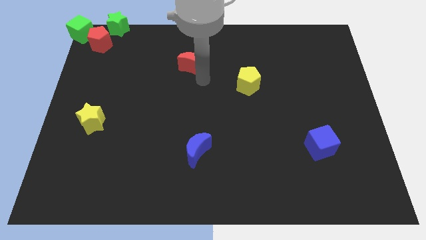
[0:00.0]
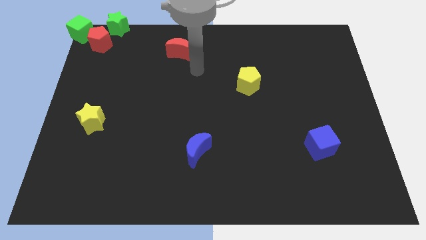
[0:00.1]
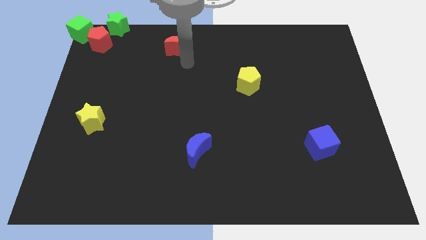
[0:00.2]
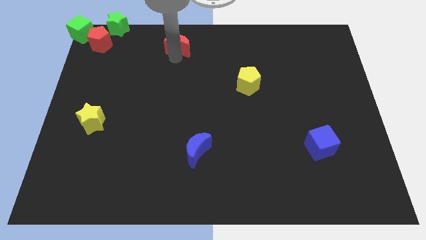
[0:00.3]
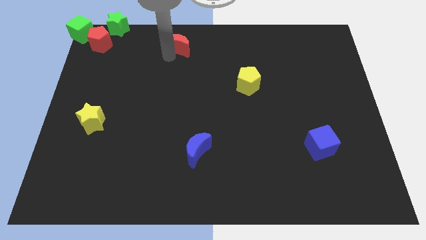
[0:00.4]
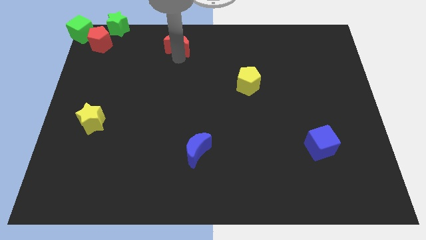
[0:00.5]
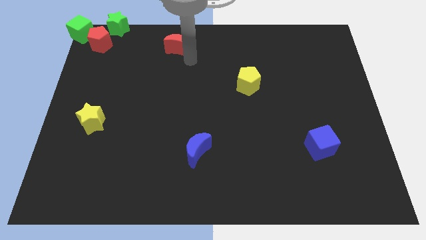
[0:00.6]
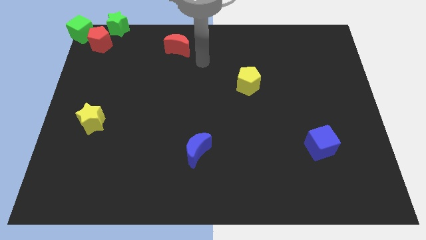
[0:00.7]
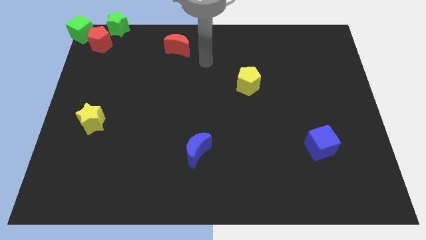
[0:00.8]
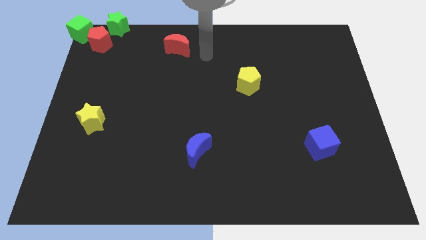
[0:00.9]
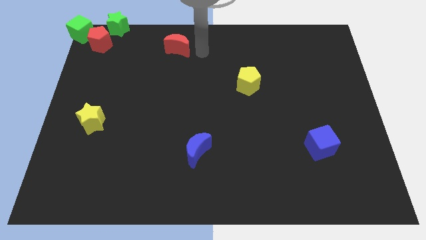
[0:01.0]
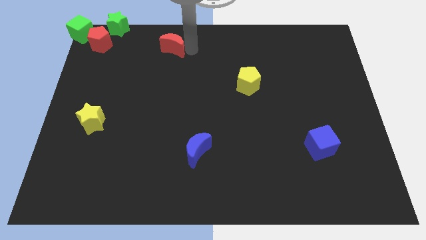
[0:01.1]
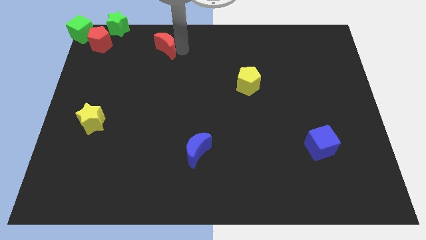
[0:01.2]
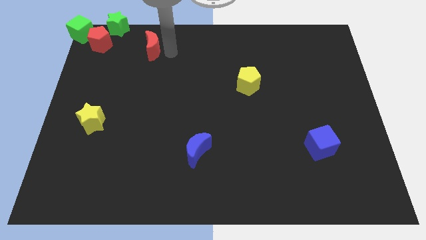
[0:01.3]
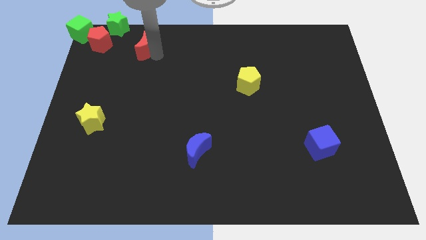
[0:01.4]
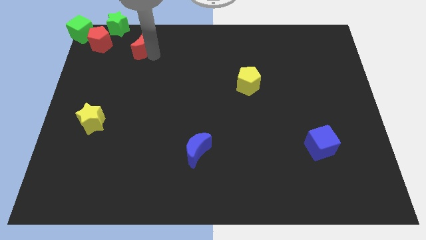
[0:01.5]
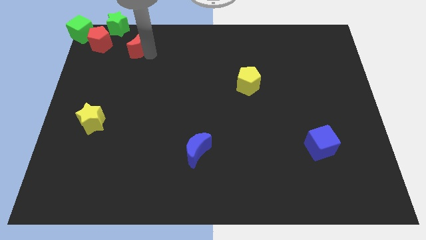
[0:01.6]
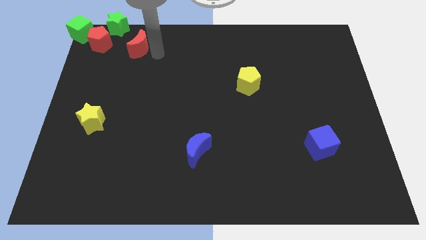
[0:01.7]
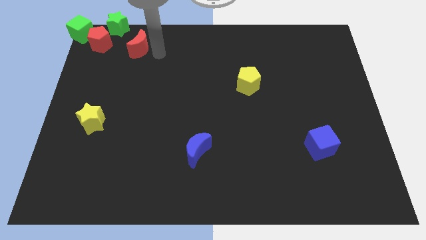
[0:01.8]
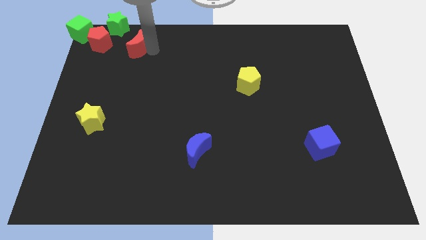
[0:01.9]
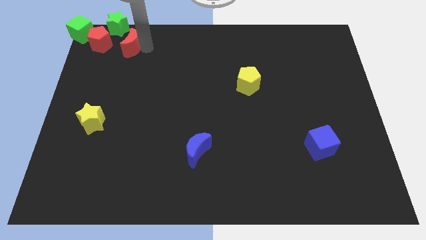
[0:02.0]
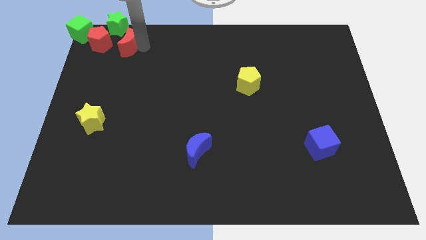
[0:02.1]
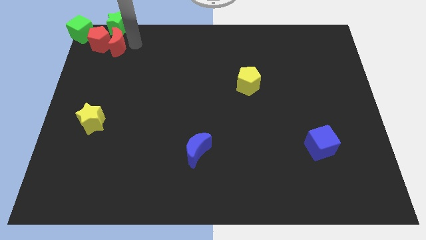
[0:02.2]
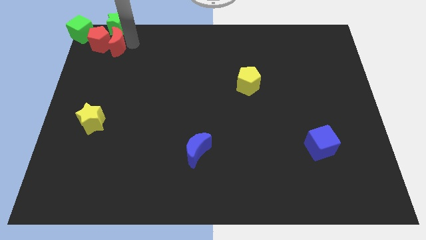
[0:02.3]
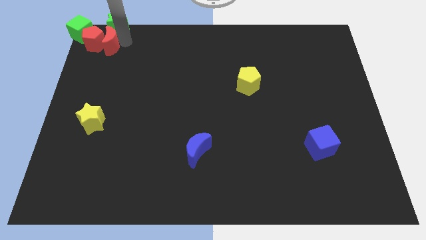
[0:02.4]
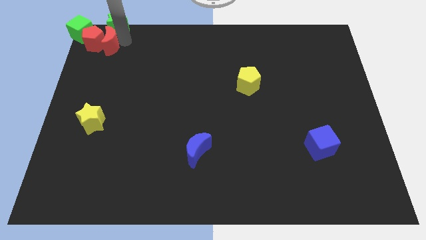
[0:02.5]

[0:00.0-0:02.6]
move the red moon into the red pentagon

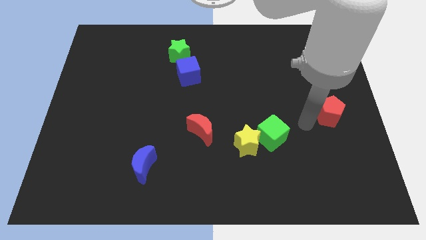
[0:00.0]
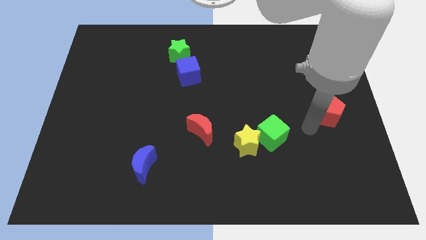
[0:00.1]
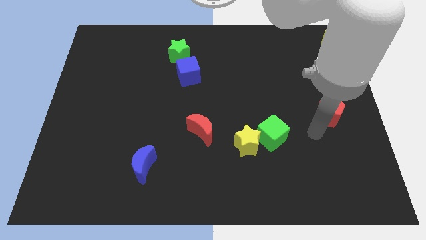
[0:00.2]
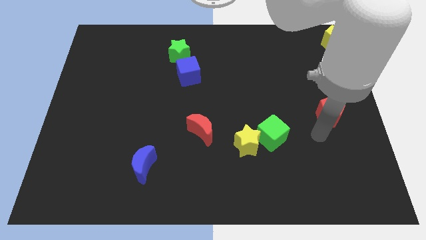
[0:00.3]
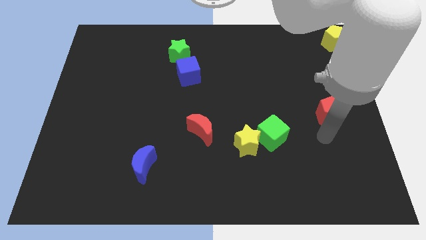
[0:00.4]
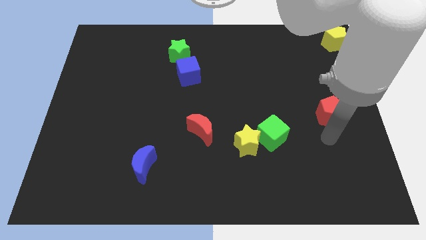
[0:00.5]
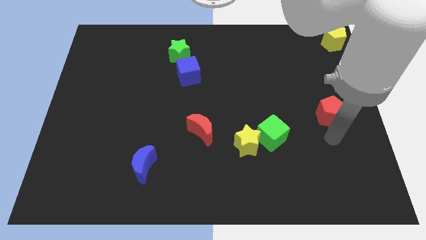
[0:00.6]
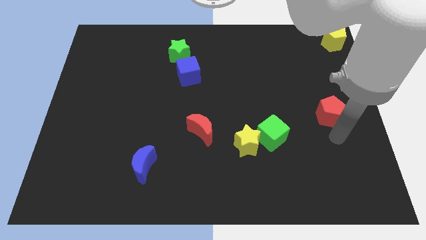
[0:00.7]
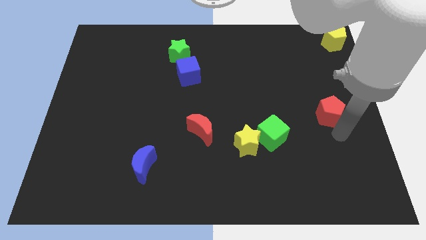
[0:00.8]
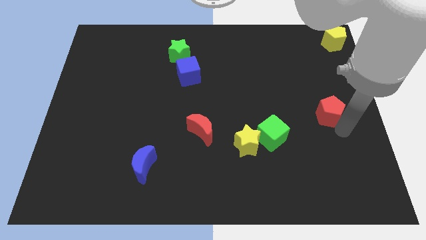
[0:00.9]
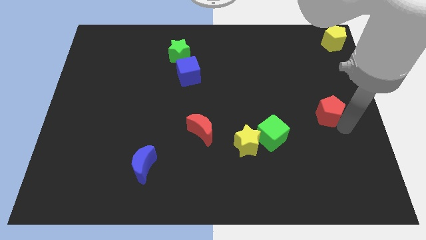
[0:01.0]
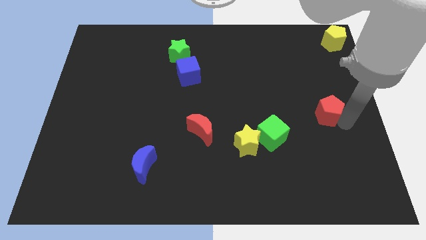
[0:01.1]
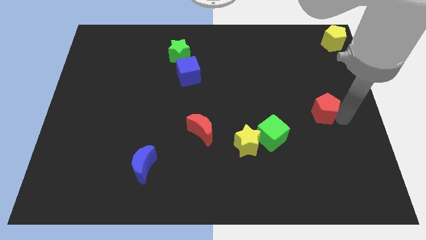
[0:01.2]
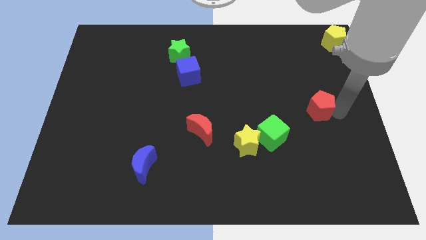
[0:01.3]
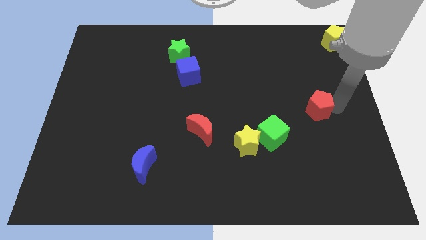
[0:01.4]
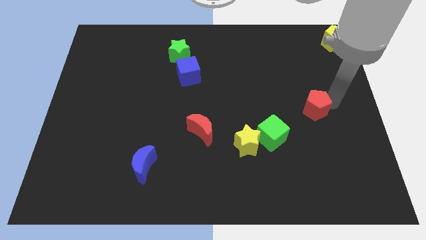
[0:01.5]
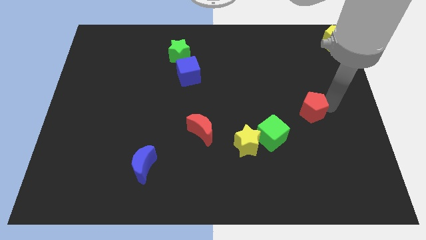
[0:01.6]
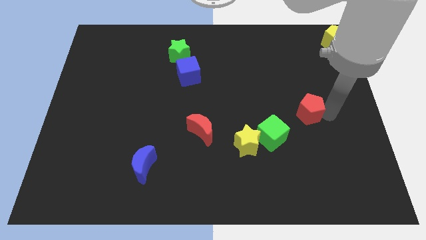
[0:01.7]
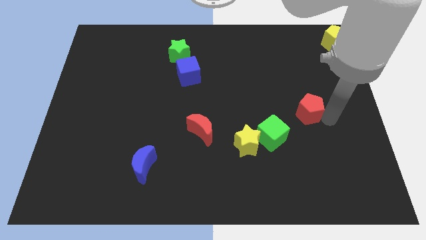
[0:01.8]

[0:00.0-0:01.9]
push the red pentagon diagonally to the right of green cube

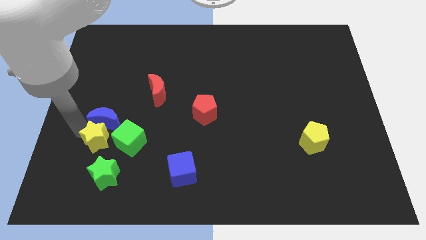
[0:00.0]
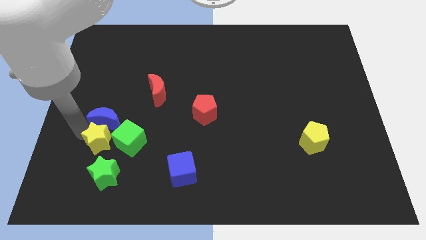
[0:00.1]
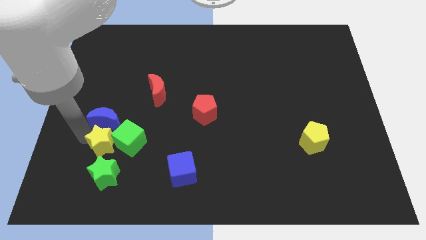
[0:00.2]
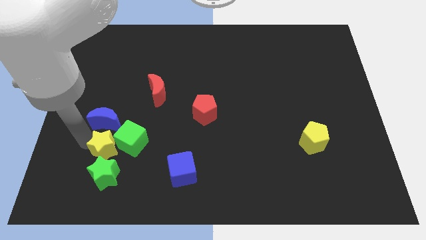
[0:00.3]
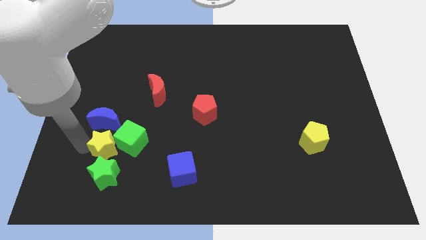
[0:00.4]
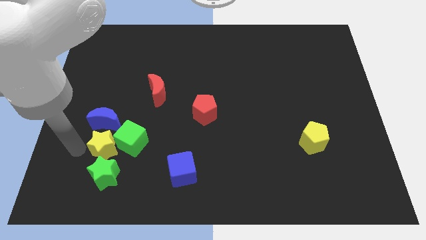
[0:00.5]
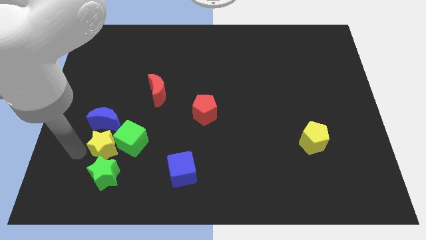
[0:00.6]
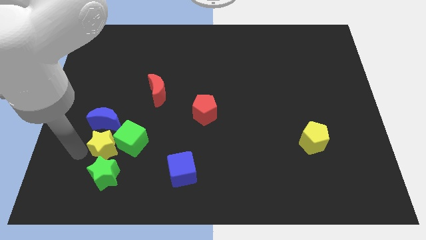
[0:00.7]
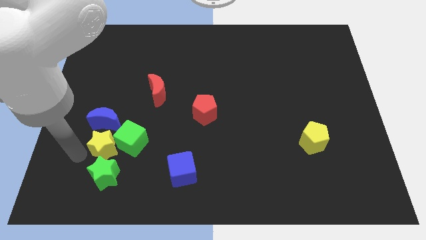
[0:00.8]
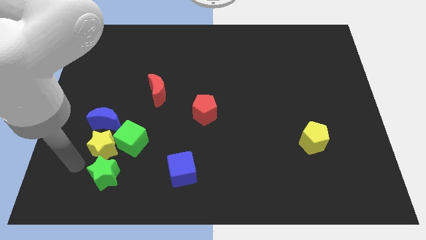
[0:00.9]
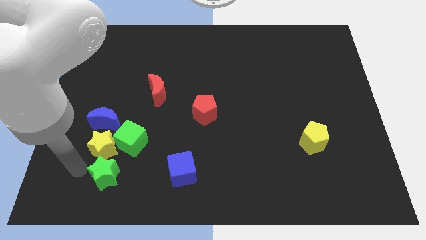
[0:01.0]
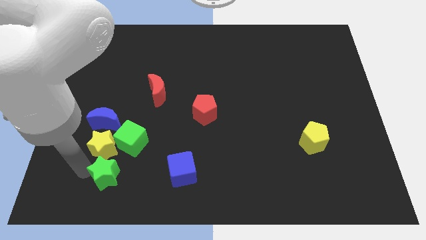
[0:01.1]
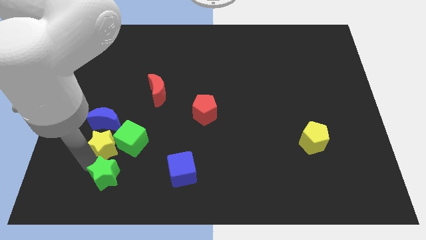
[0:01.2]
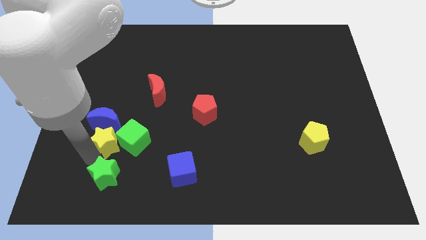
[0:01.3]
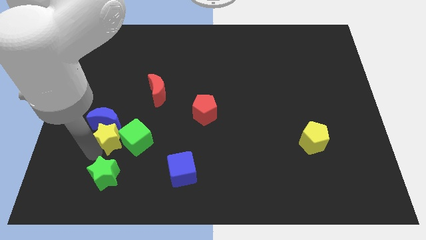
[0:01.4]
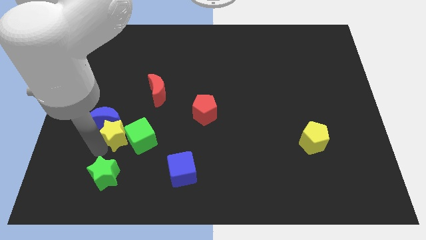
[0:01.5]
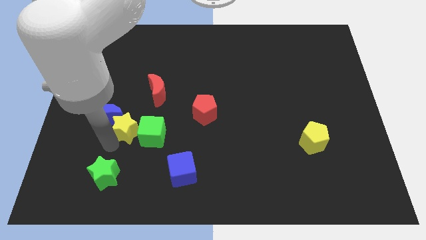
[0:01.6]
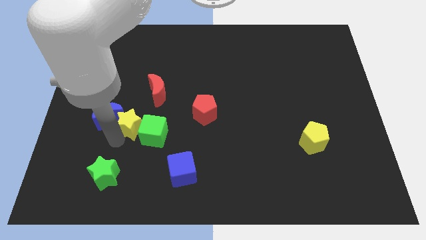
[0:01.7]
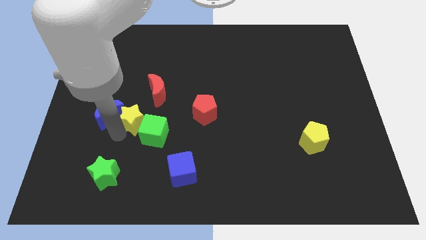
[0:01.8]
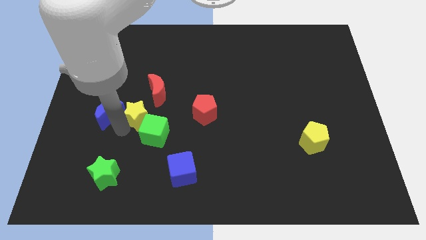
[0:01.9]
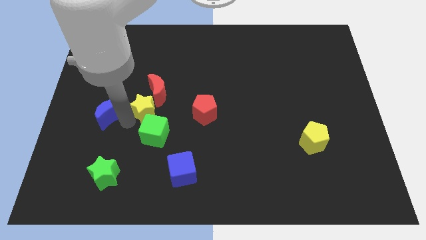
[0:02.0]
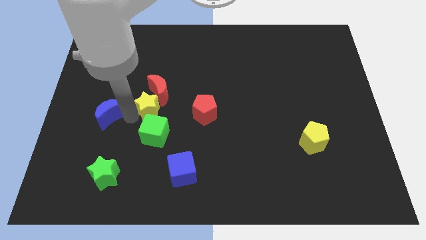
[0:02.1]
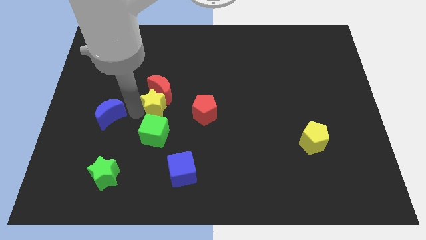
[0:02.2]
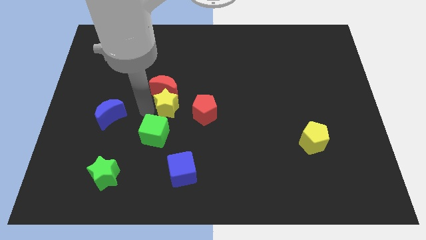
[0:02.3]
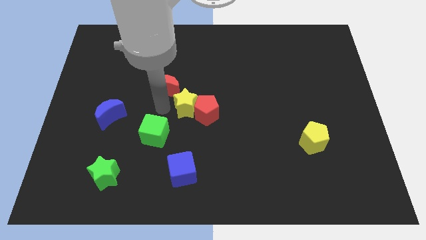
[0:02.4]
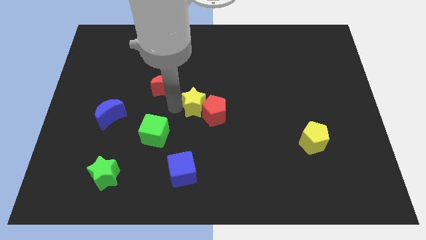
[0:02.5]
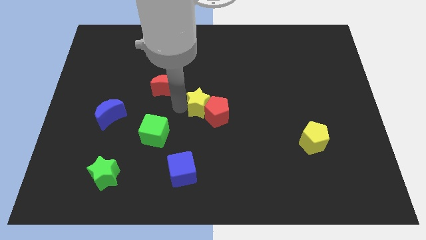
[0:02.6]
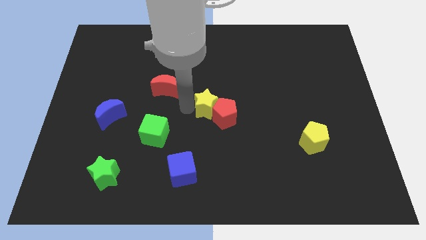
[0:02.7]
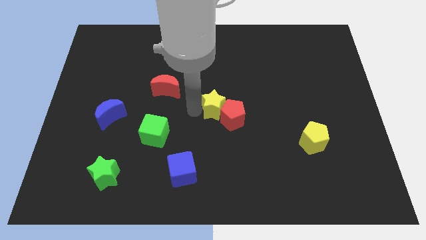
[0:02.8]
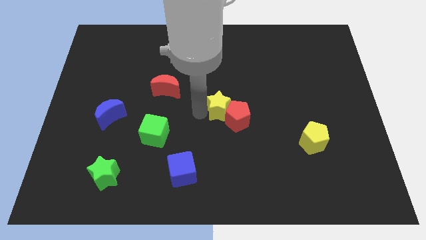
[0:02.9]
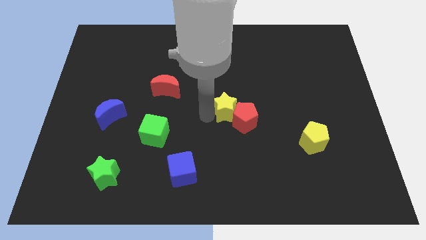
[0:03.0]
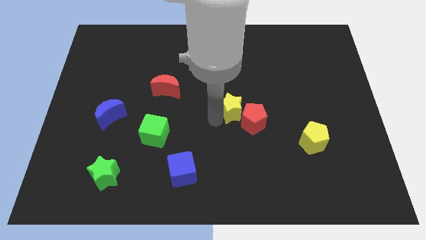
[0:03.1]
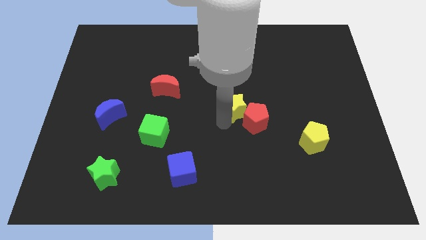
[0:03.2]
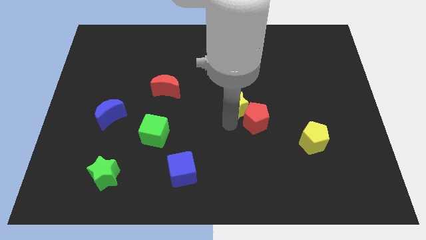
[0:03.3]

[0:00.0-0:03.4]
push the yellow star into the green cube

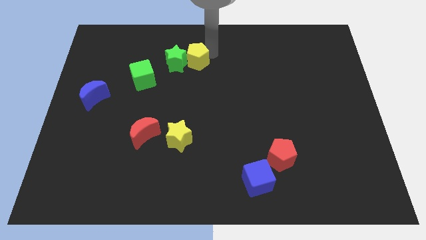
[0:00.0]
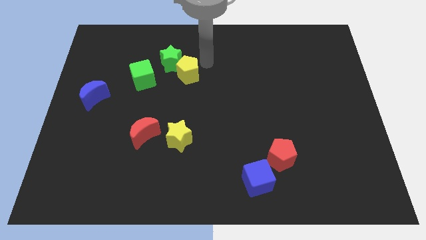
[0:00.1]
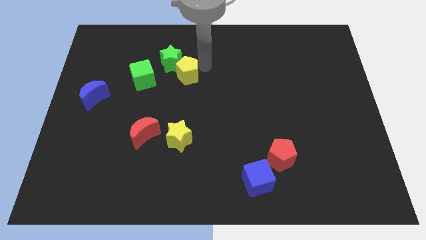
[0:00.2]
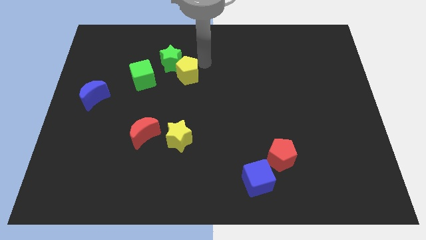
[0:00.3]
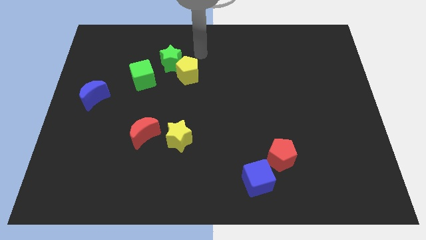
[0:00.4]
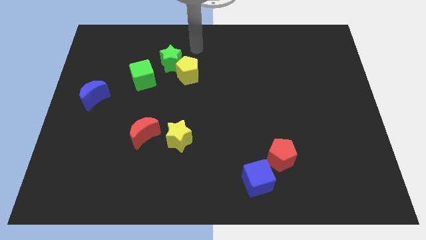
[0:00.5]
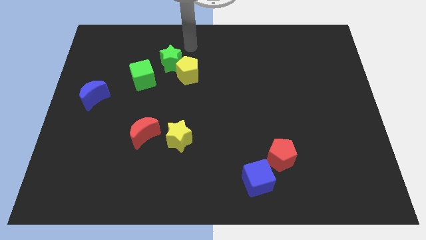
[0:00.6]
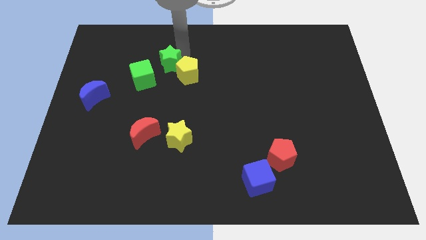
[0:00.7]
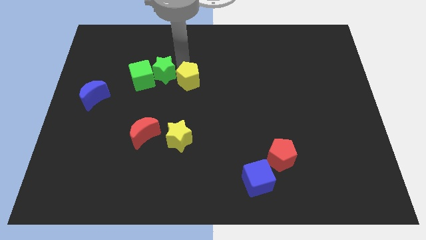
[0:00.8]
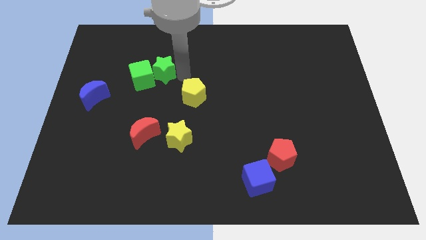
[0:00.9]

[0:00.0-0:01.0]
place the yellow pentagon vertically parallel to the yellow star

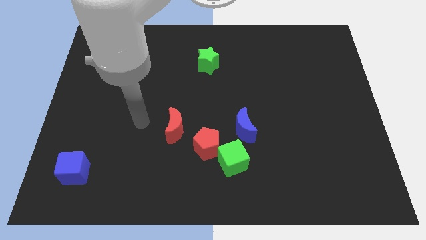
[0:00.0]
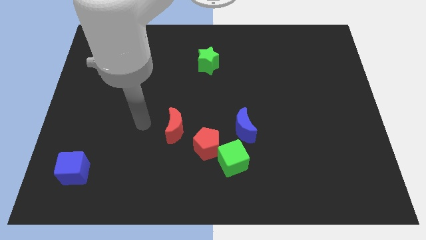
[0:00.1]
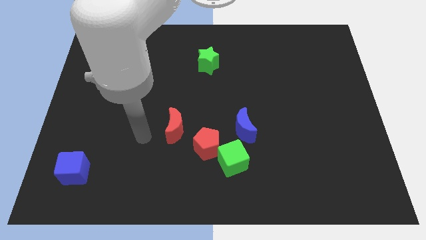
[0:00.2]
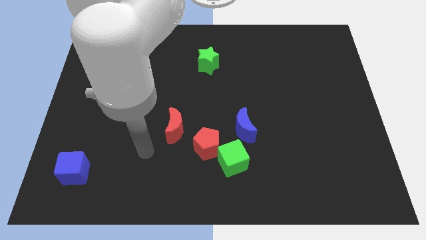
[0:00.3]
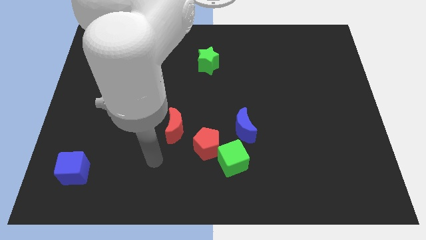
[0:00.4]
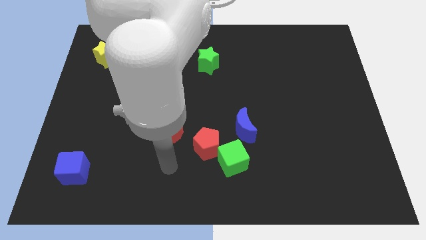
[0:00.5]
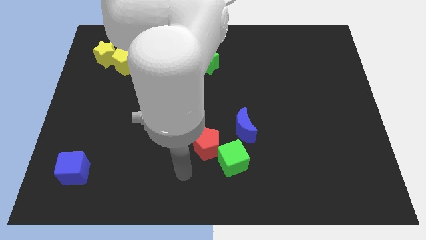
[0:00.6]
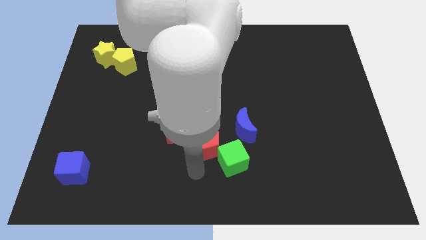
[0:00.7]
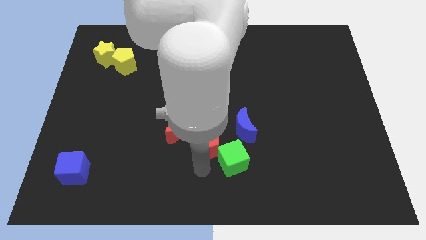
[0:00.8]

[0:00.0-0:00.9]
place the arm down to the red pentagon
